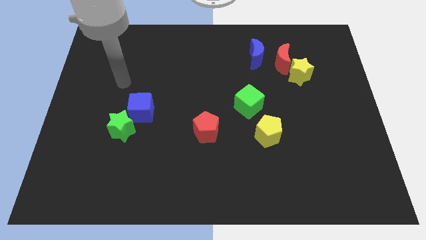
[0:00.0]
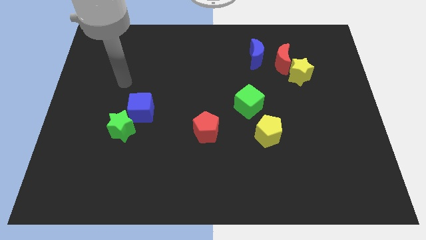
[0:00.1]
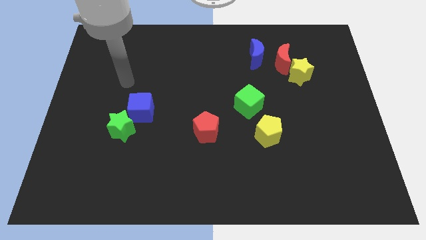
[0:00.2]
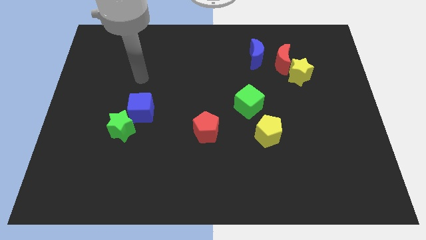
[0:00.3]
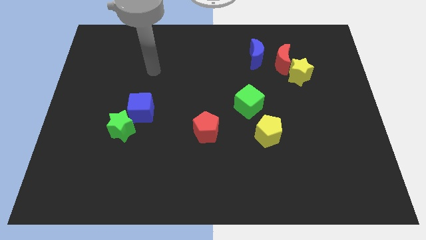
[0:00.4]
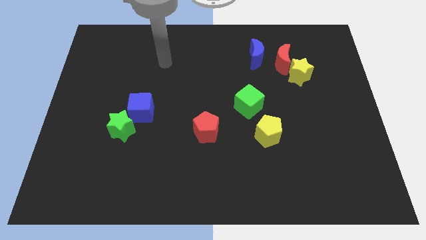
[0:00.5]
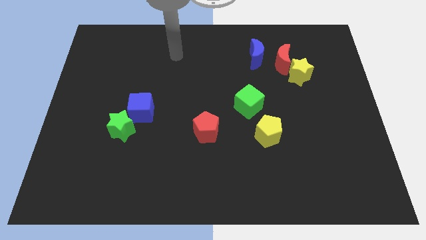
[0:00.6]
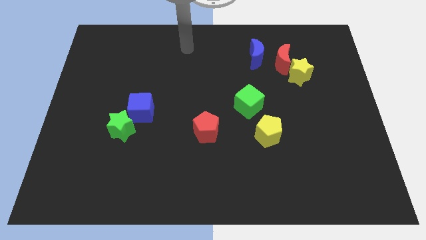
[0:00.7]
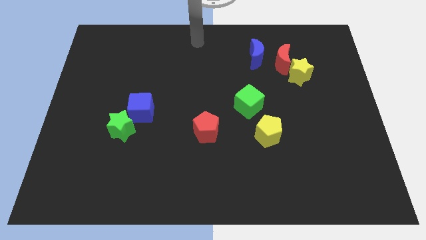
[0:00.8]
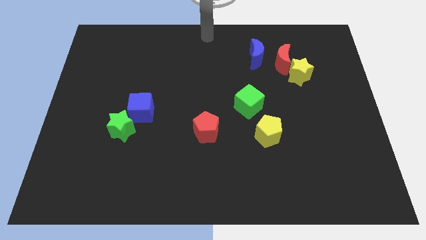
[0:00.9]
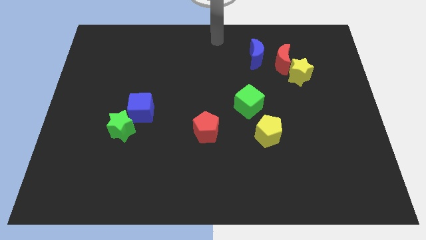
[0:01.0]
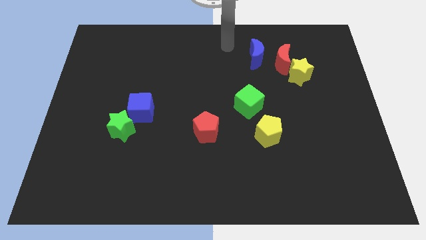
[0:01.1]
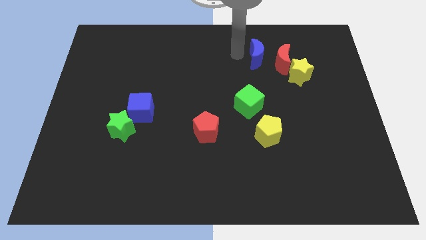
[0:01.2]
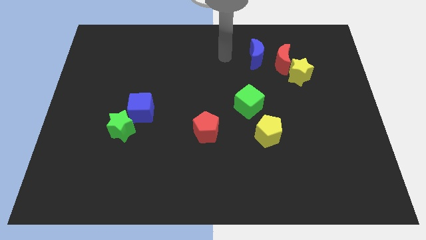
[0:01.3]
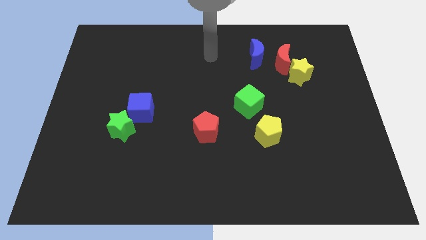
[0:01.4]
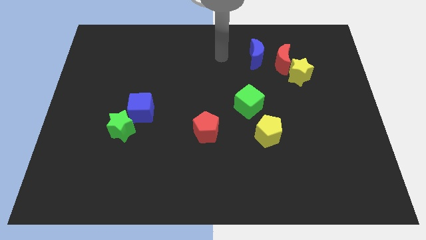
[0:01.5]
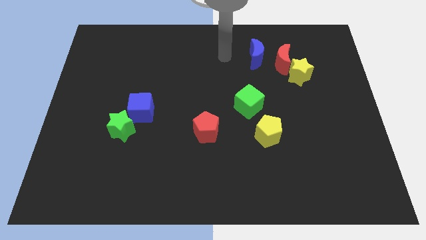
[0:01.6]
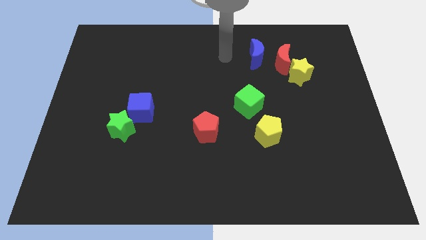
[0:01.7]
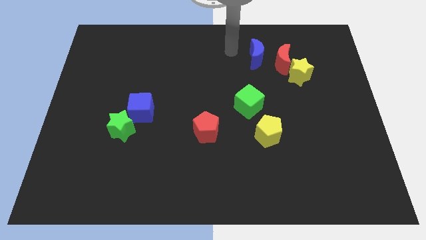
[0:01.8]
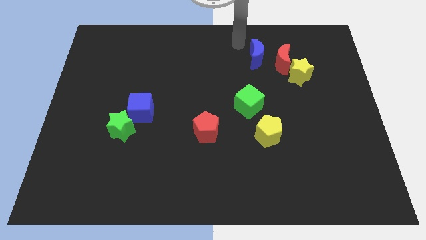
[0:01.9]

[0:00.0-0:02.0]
point the arm to the left of the blue moon

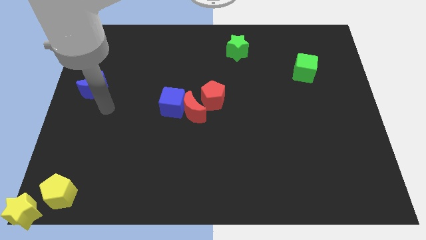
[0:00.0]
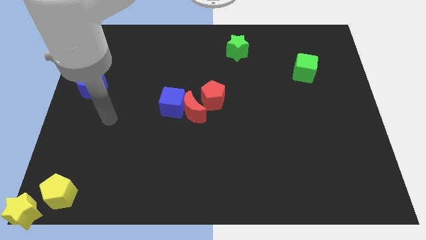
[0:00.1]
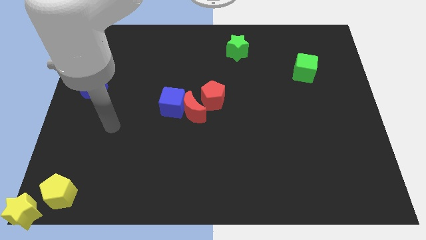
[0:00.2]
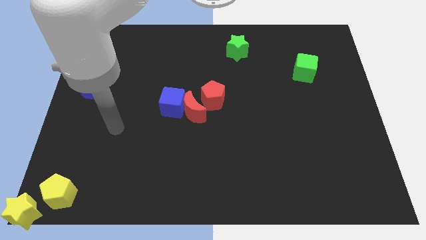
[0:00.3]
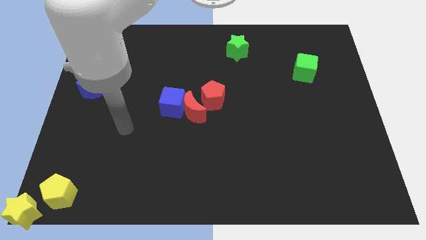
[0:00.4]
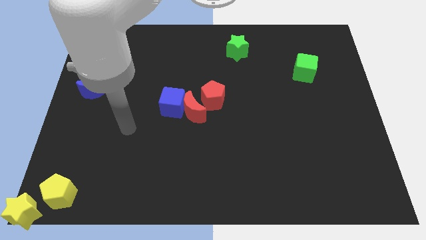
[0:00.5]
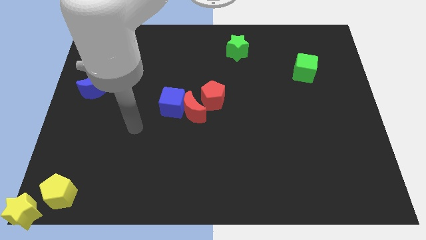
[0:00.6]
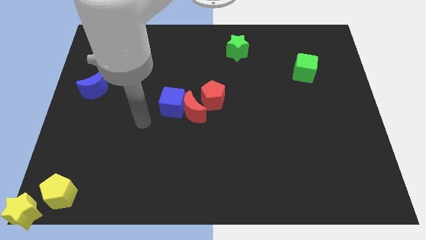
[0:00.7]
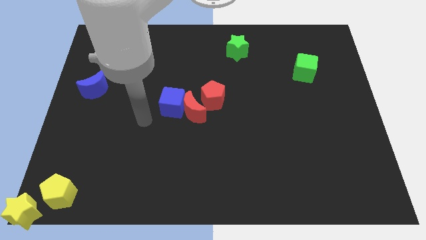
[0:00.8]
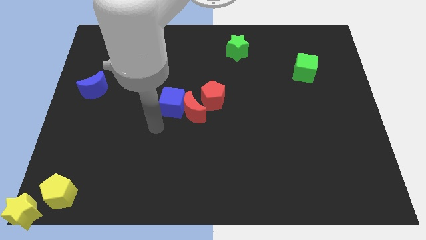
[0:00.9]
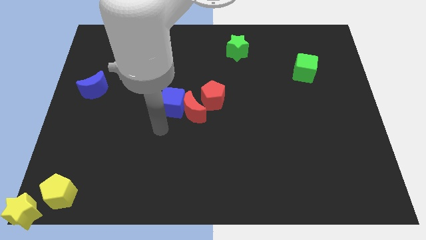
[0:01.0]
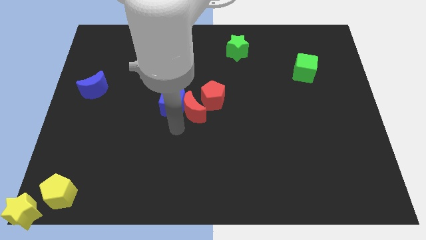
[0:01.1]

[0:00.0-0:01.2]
move your arm below the blue cube

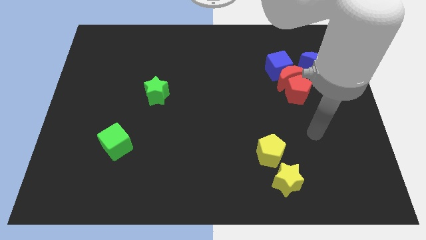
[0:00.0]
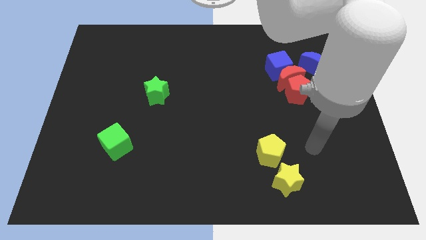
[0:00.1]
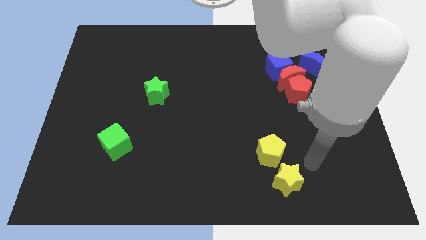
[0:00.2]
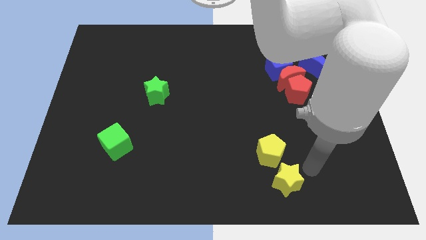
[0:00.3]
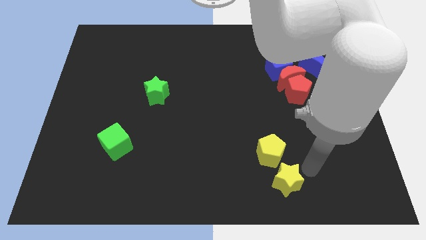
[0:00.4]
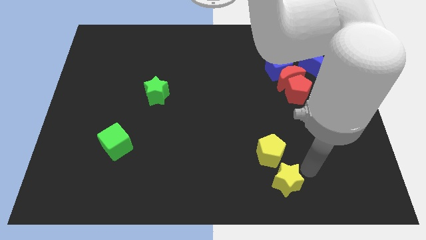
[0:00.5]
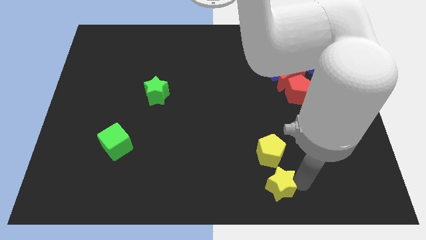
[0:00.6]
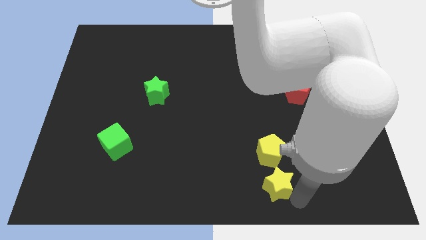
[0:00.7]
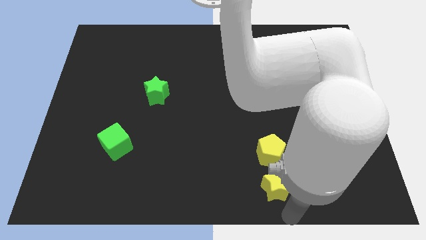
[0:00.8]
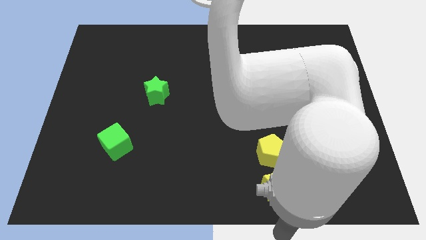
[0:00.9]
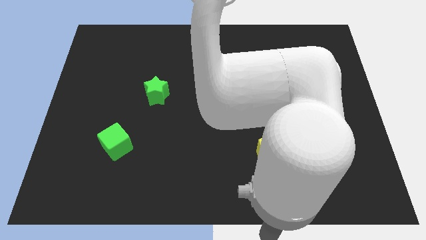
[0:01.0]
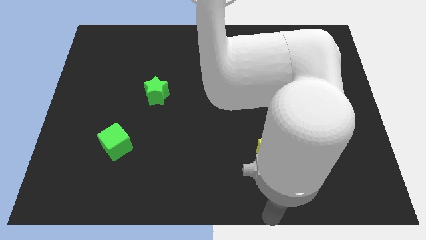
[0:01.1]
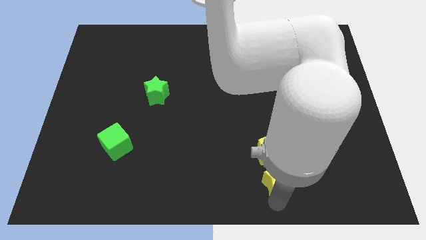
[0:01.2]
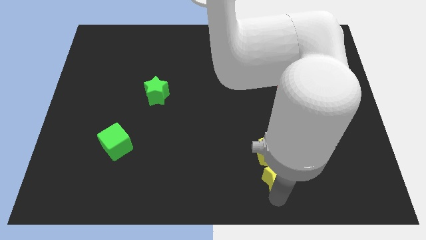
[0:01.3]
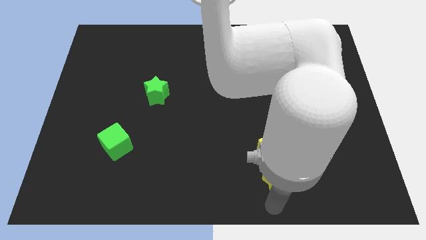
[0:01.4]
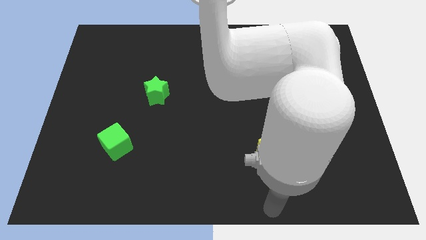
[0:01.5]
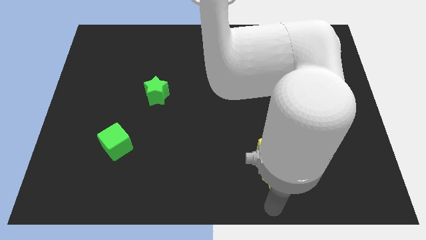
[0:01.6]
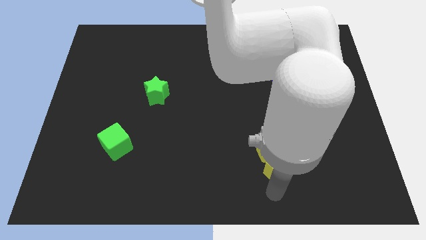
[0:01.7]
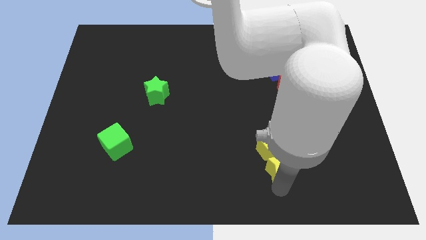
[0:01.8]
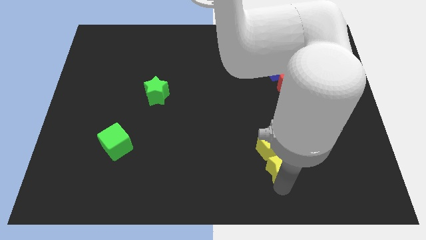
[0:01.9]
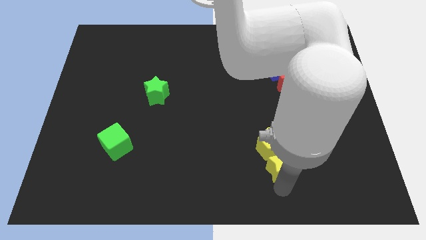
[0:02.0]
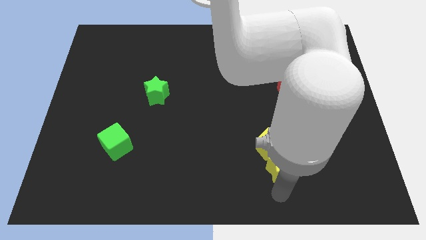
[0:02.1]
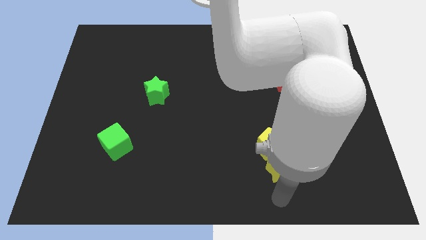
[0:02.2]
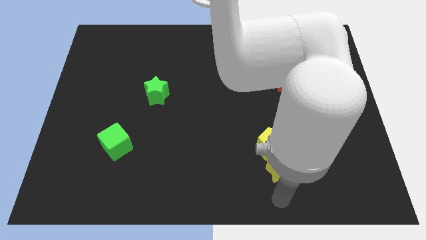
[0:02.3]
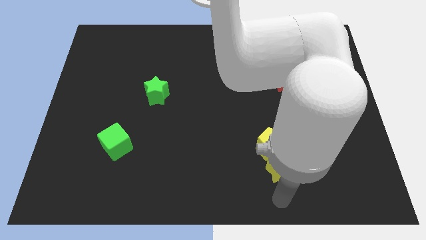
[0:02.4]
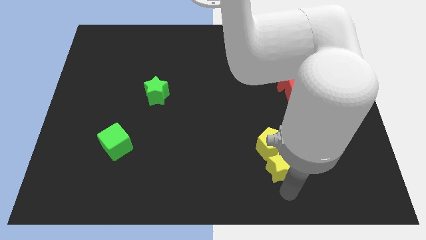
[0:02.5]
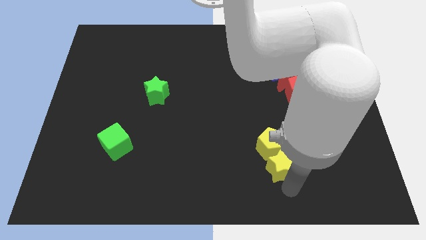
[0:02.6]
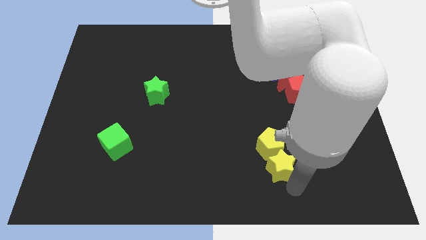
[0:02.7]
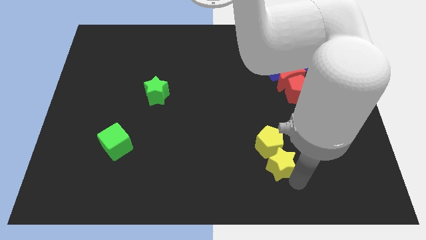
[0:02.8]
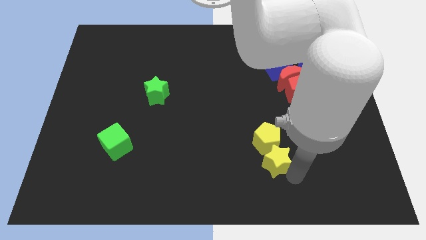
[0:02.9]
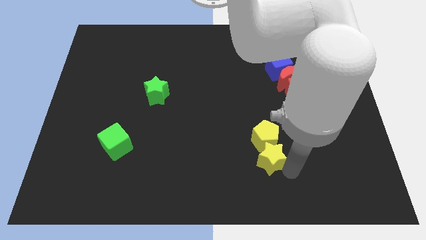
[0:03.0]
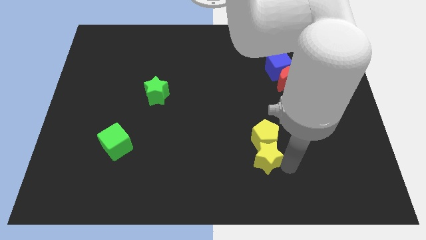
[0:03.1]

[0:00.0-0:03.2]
push the yellow star into the bottom of the yellow pentagon

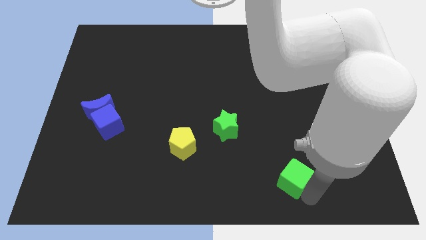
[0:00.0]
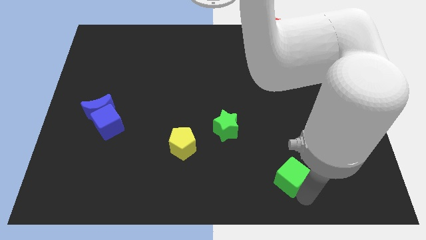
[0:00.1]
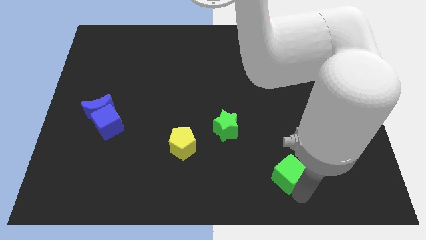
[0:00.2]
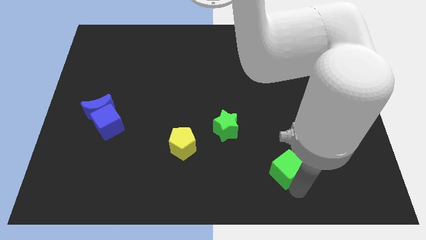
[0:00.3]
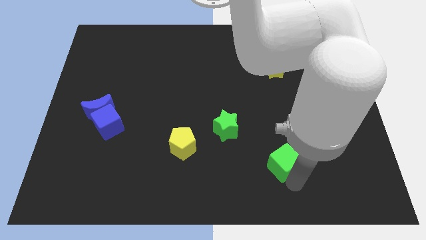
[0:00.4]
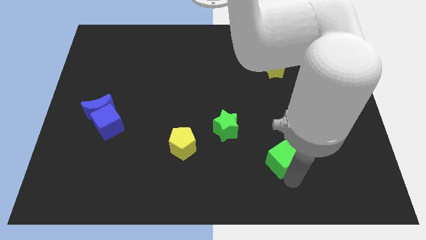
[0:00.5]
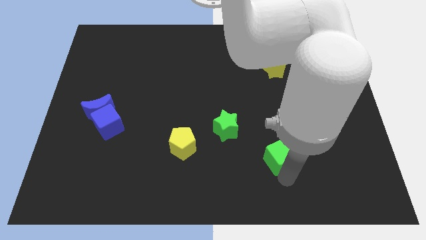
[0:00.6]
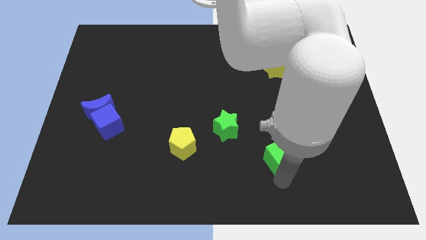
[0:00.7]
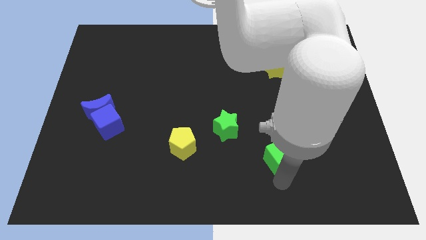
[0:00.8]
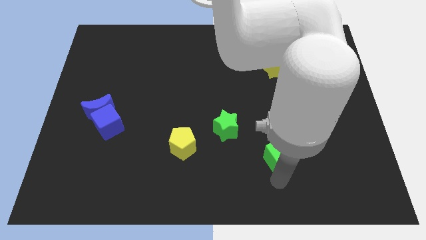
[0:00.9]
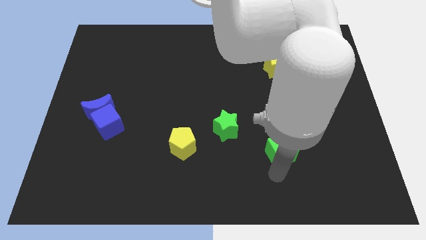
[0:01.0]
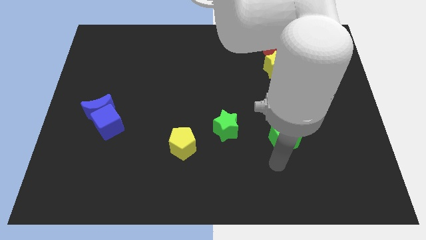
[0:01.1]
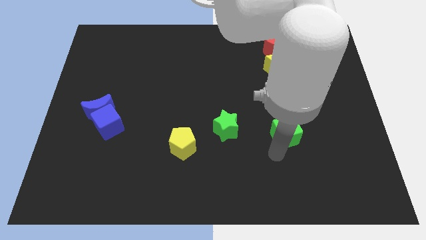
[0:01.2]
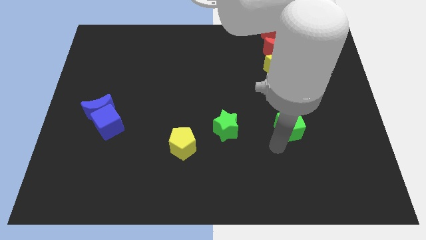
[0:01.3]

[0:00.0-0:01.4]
push the green cube to the right of the green star

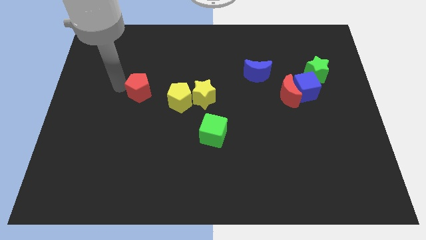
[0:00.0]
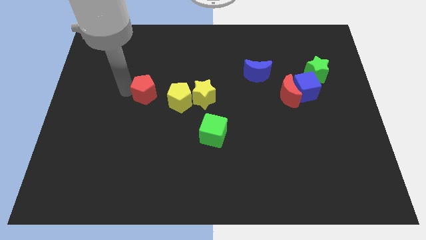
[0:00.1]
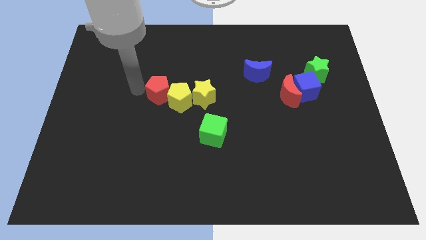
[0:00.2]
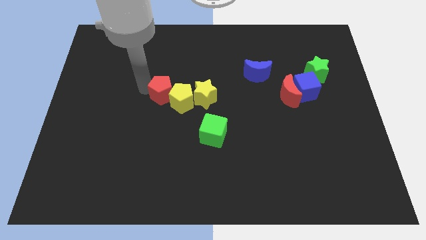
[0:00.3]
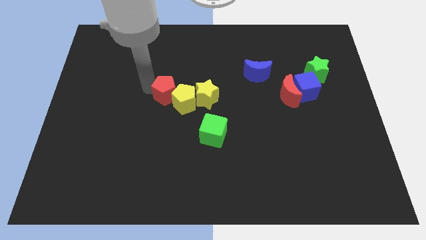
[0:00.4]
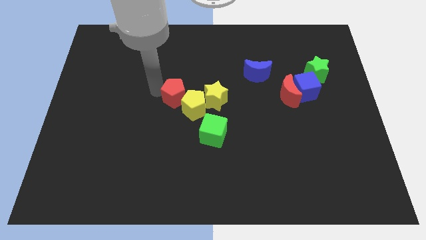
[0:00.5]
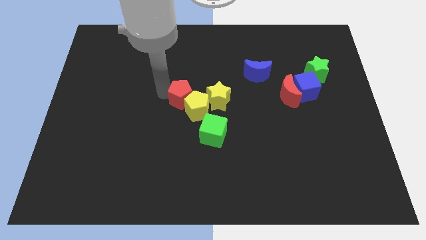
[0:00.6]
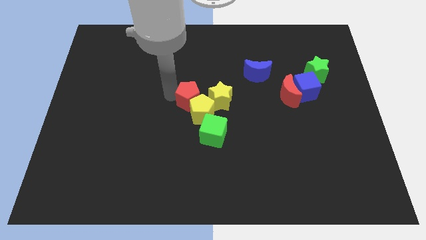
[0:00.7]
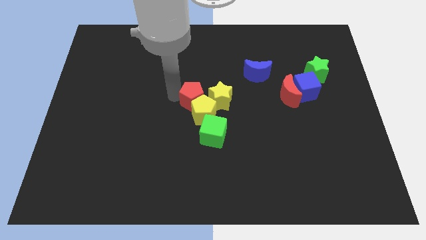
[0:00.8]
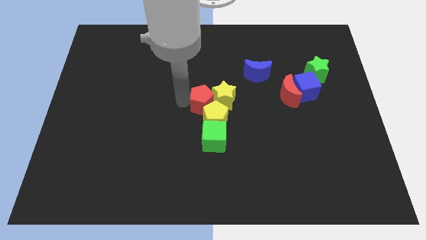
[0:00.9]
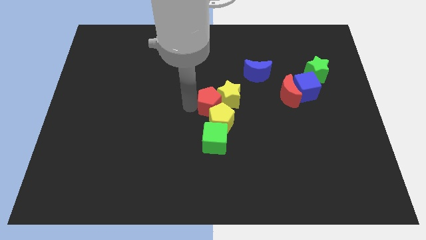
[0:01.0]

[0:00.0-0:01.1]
push the red pentagon into the yellow blocks
